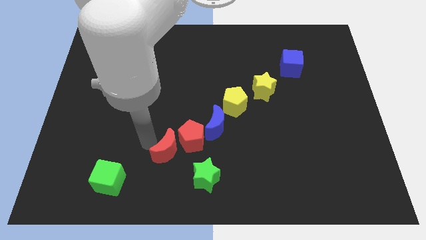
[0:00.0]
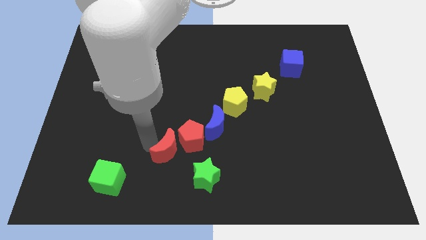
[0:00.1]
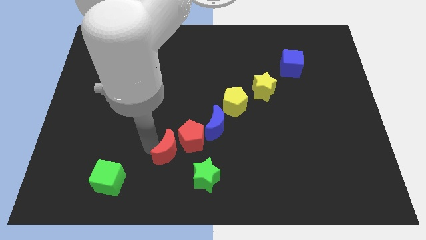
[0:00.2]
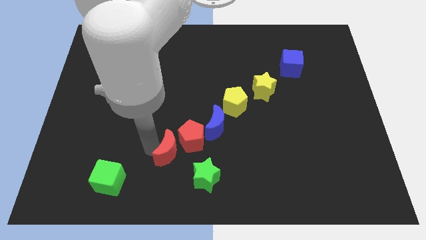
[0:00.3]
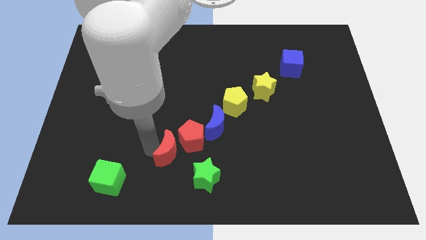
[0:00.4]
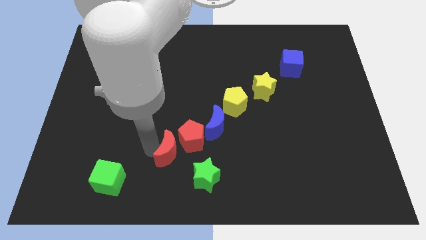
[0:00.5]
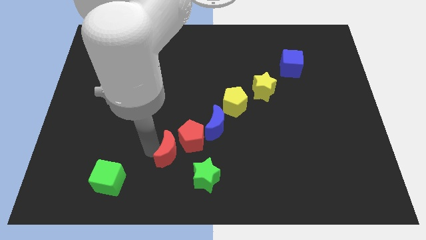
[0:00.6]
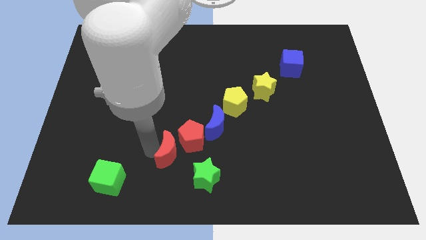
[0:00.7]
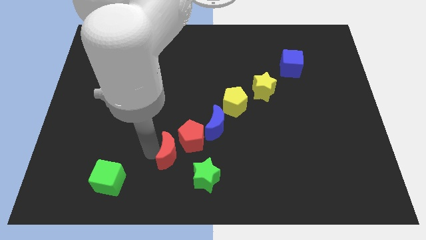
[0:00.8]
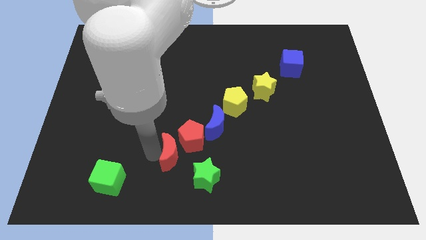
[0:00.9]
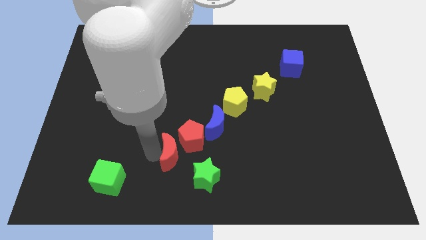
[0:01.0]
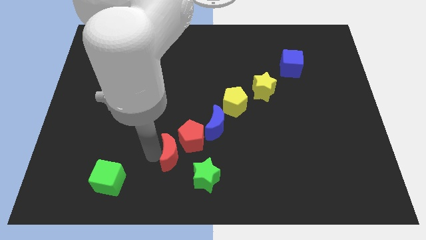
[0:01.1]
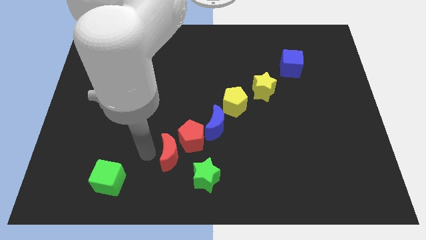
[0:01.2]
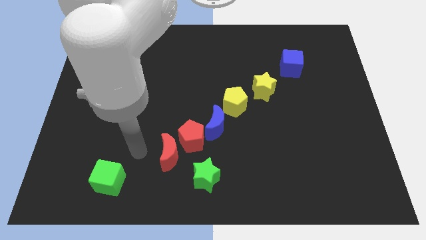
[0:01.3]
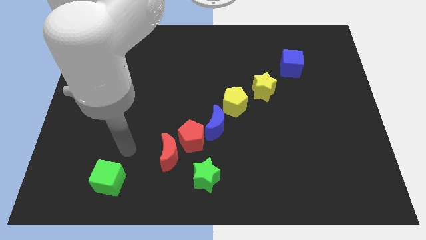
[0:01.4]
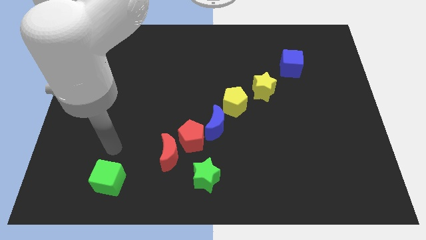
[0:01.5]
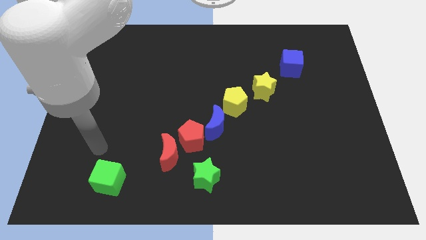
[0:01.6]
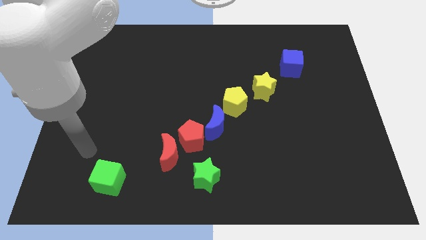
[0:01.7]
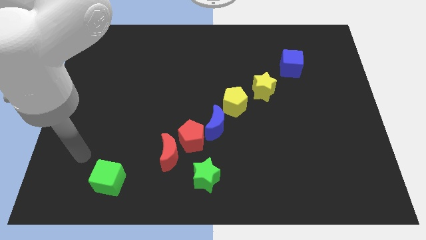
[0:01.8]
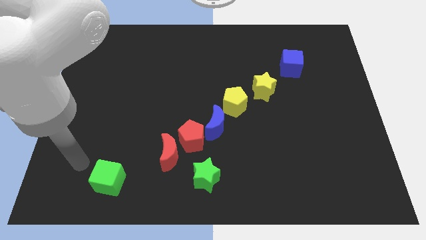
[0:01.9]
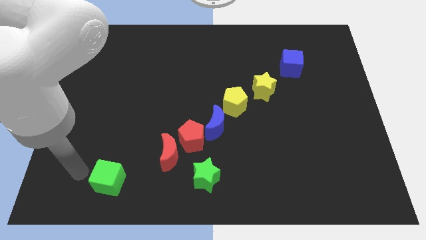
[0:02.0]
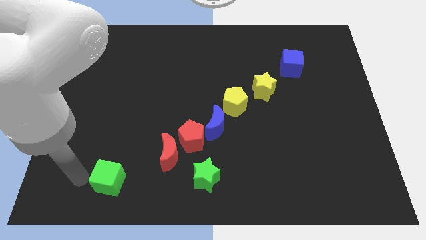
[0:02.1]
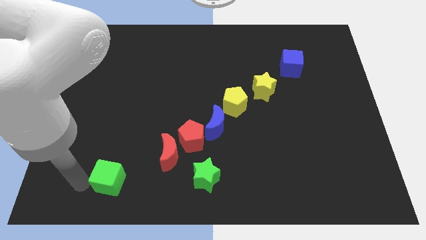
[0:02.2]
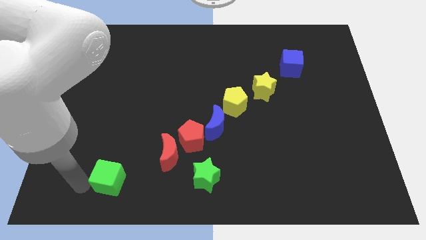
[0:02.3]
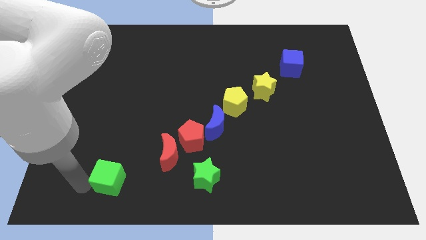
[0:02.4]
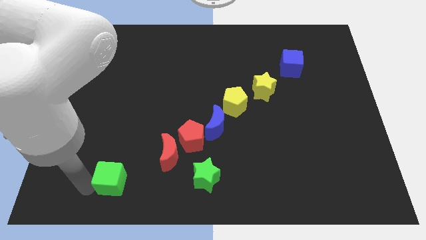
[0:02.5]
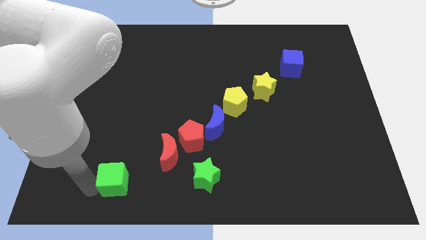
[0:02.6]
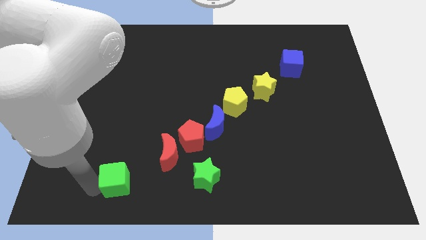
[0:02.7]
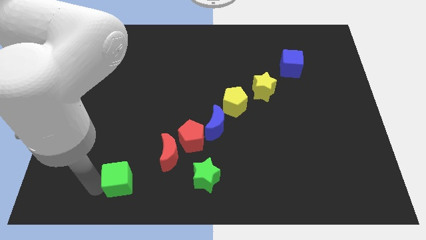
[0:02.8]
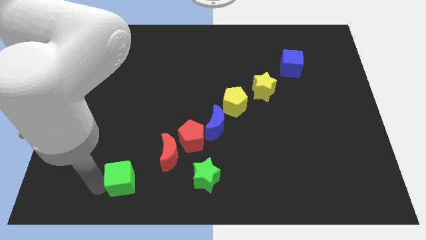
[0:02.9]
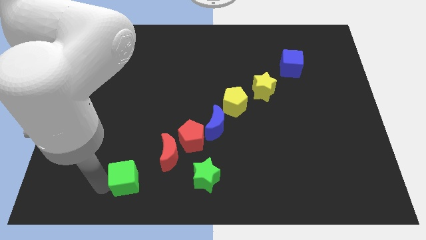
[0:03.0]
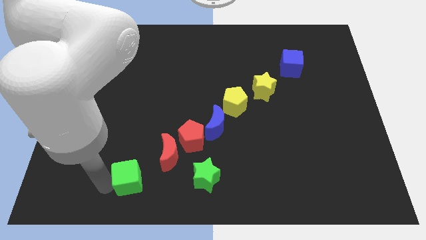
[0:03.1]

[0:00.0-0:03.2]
slide the green cube towards the red moon

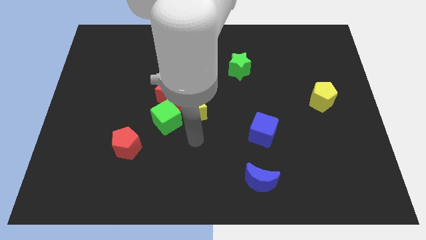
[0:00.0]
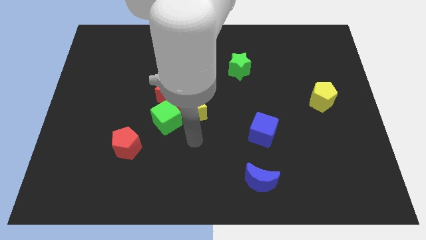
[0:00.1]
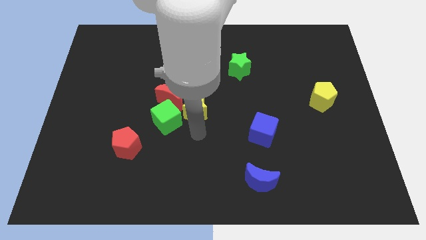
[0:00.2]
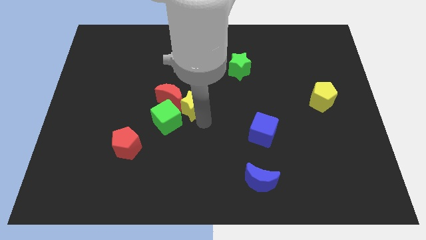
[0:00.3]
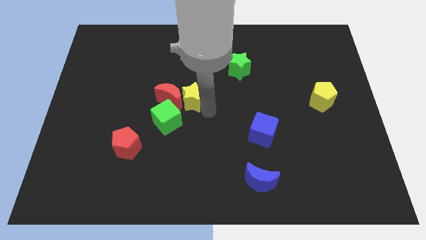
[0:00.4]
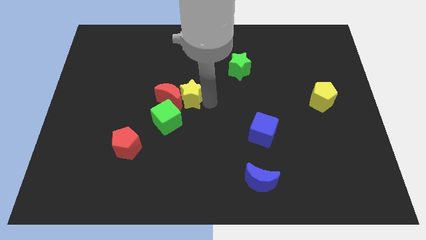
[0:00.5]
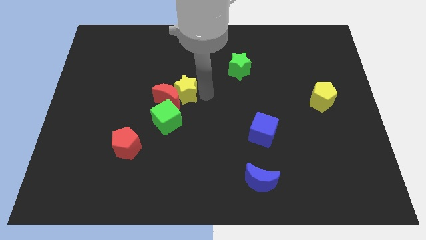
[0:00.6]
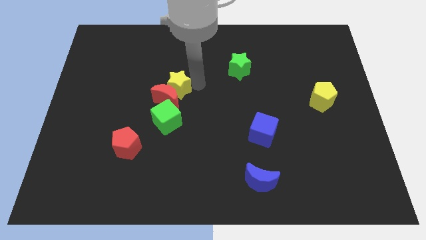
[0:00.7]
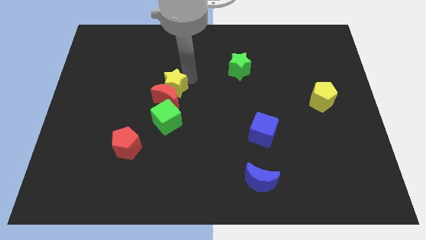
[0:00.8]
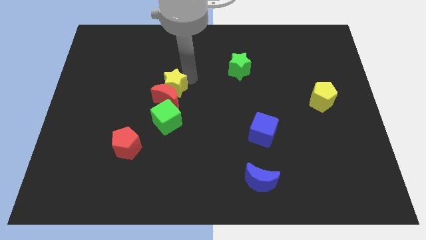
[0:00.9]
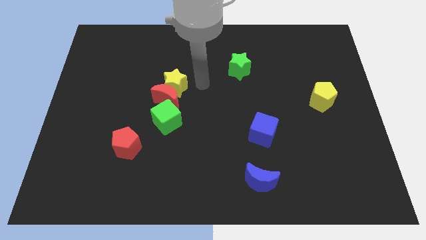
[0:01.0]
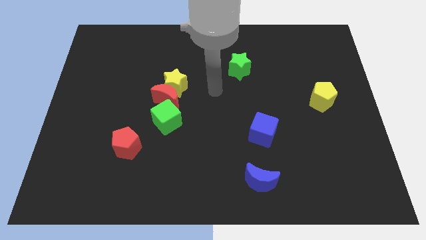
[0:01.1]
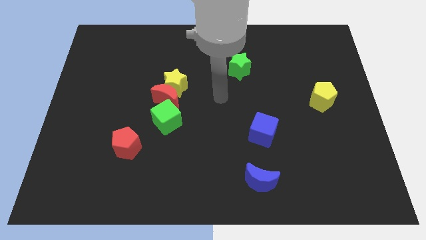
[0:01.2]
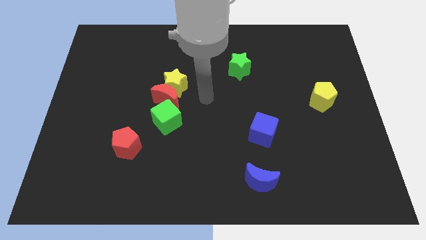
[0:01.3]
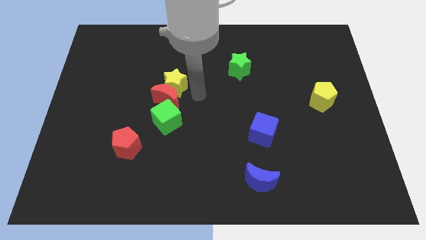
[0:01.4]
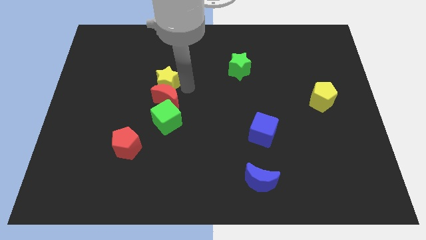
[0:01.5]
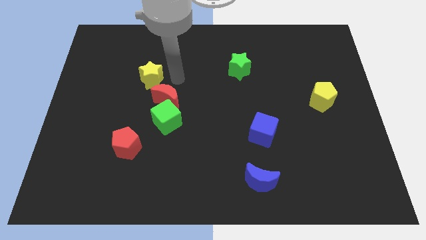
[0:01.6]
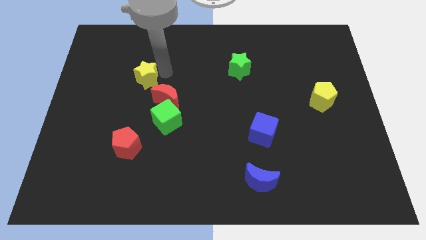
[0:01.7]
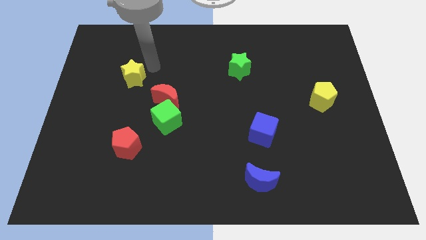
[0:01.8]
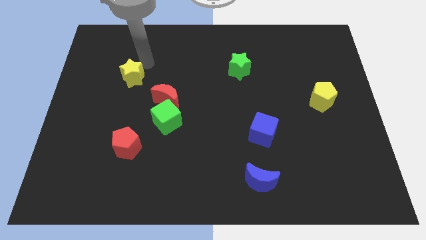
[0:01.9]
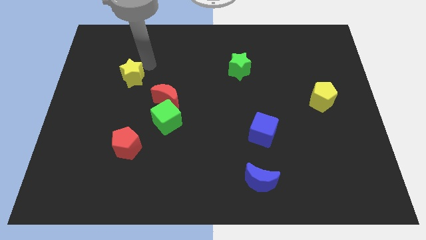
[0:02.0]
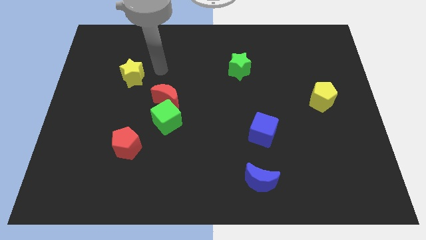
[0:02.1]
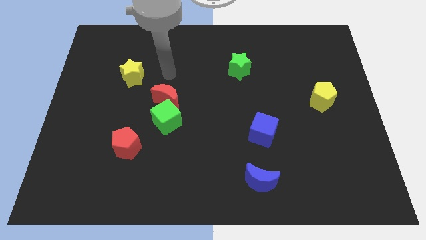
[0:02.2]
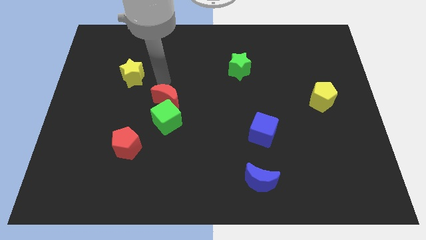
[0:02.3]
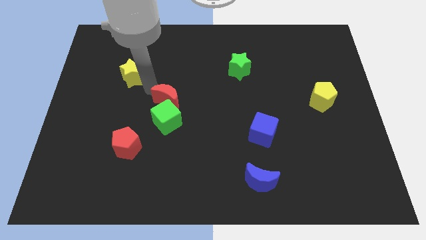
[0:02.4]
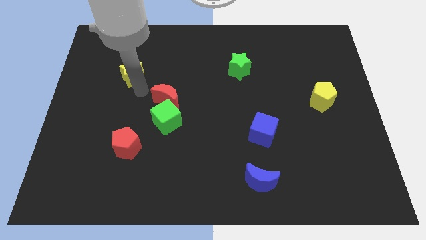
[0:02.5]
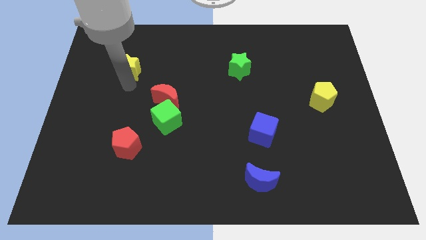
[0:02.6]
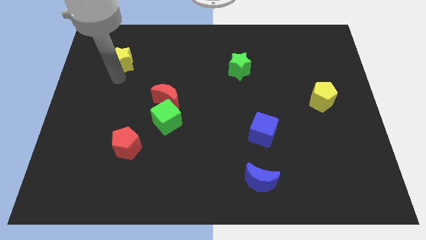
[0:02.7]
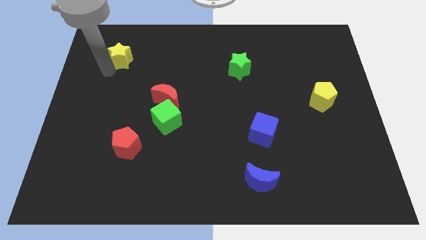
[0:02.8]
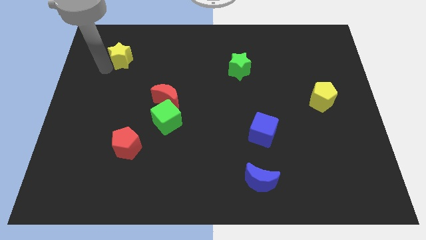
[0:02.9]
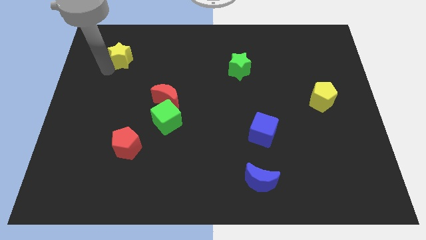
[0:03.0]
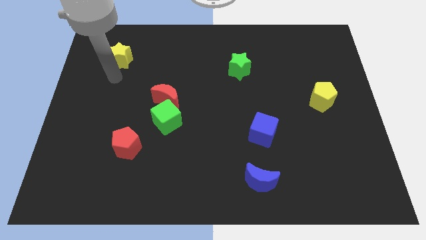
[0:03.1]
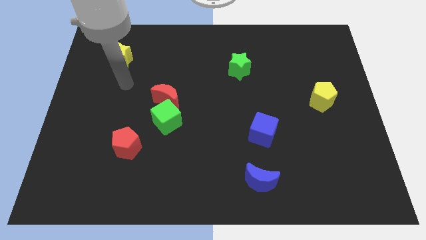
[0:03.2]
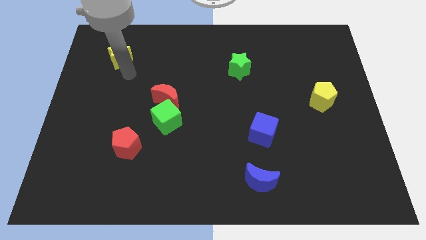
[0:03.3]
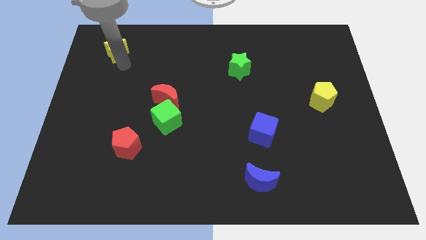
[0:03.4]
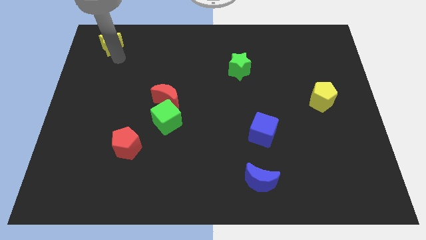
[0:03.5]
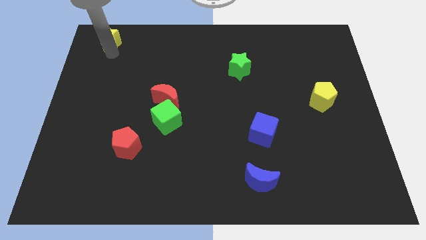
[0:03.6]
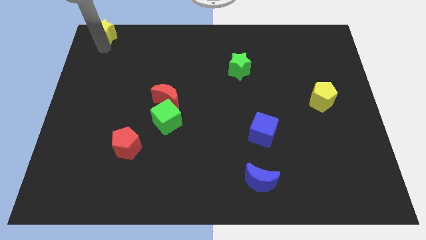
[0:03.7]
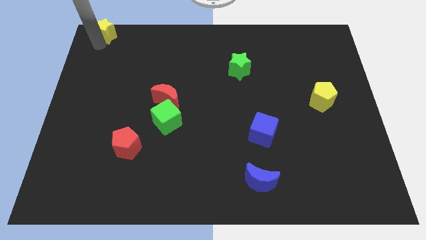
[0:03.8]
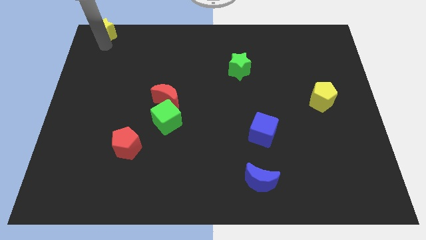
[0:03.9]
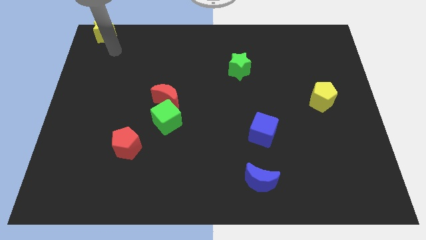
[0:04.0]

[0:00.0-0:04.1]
slide the yellow star to the top left side of the table

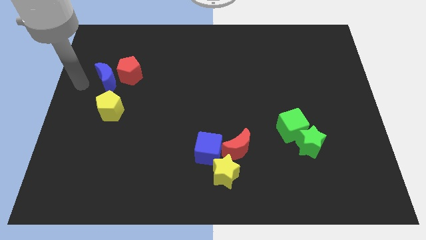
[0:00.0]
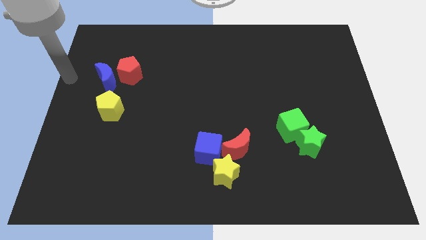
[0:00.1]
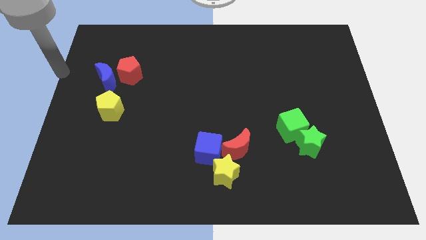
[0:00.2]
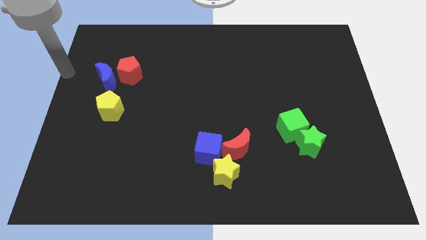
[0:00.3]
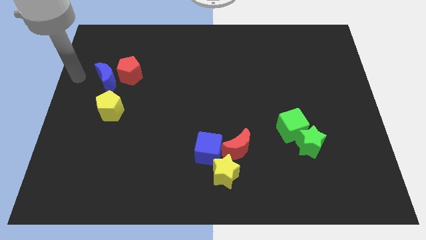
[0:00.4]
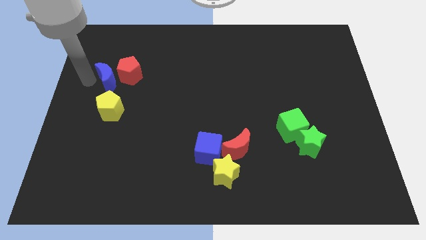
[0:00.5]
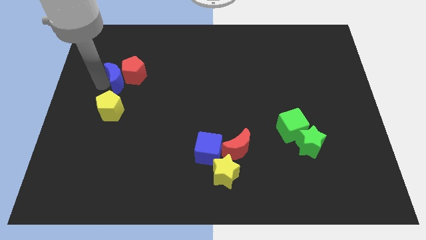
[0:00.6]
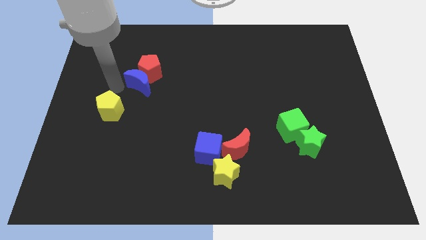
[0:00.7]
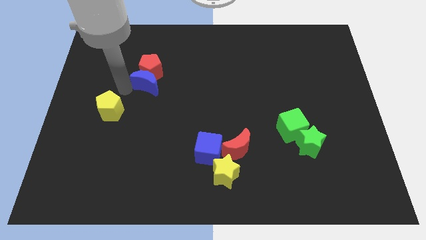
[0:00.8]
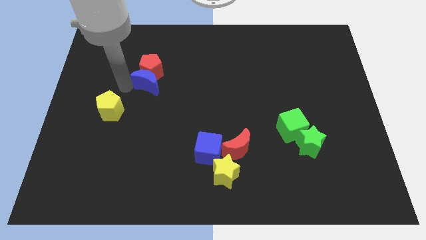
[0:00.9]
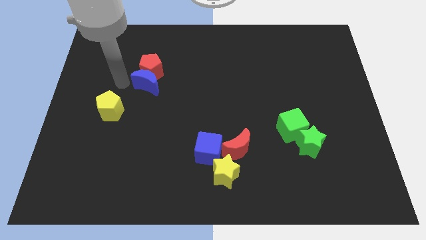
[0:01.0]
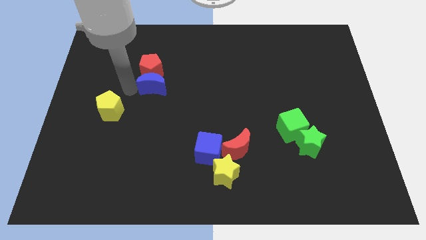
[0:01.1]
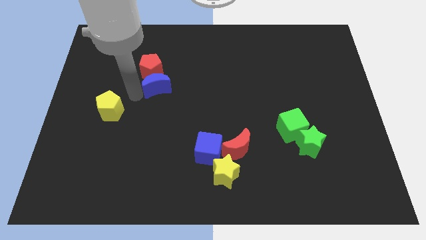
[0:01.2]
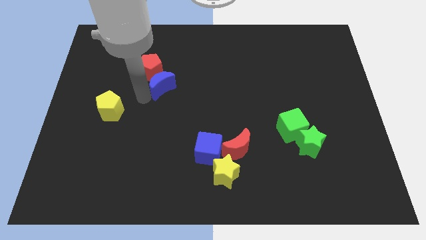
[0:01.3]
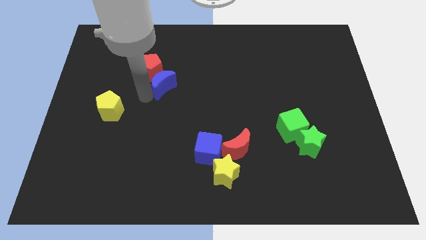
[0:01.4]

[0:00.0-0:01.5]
push blue moon into the red pentagon
